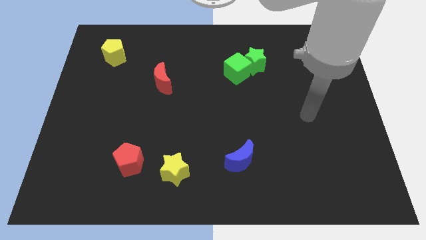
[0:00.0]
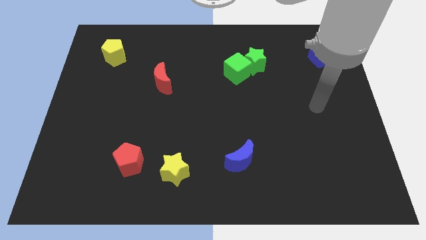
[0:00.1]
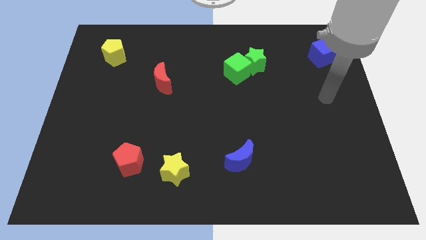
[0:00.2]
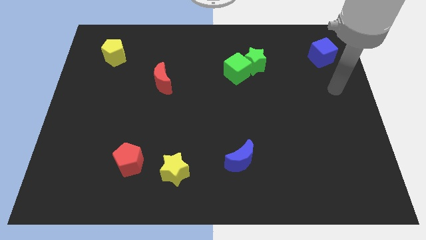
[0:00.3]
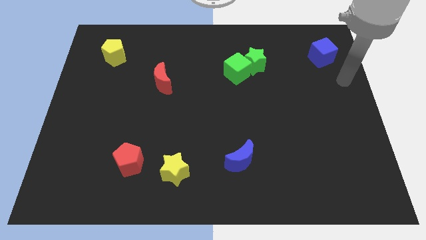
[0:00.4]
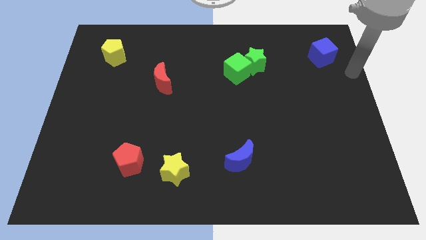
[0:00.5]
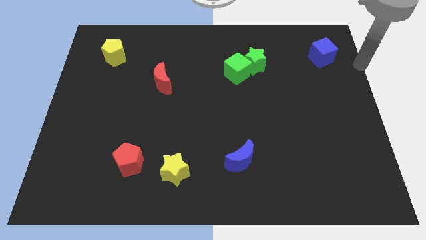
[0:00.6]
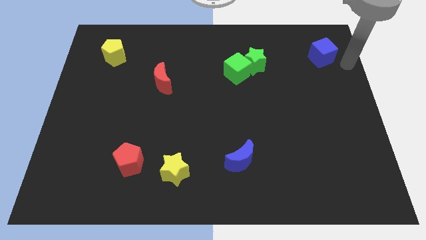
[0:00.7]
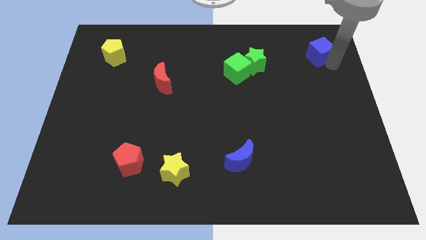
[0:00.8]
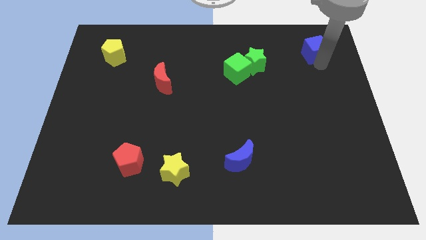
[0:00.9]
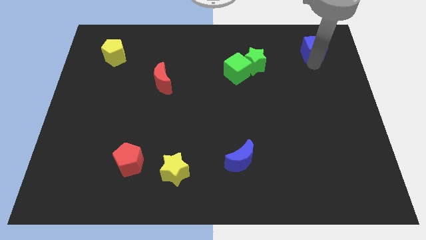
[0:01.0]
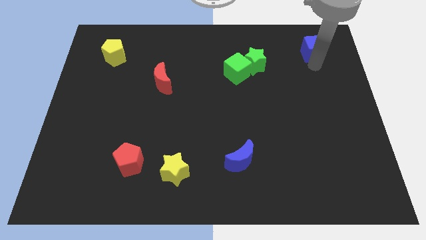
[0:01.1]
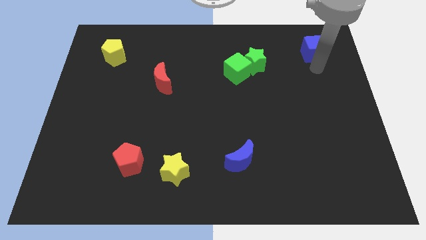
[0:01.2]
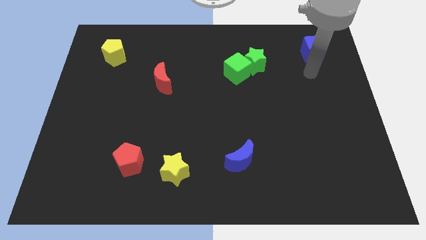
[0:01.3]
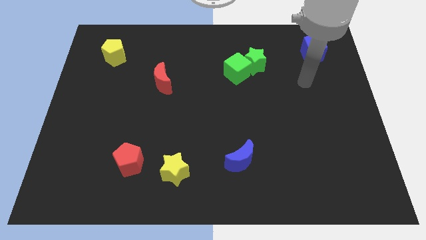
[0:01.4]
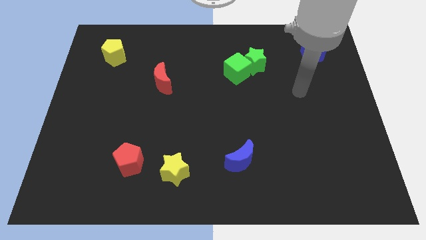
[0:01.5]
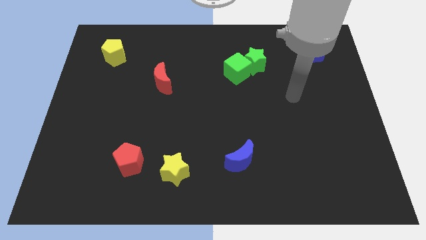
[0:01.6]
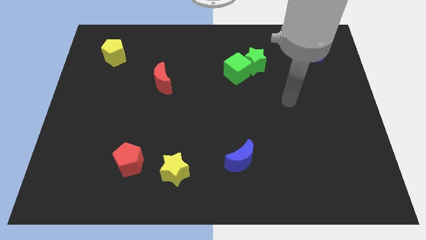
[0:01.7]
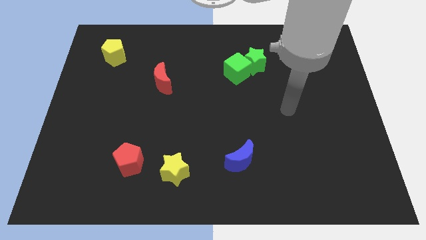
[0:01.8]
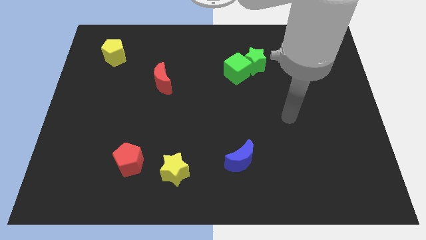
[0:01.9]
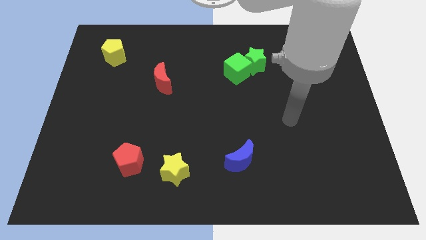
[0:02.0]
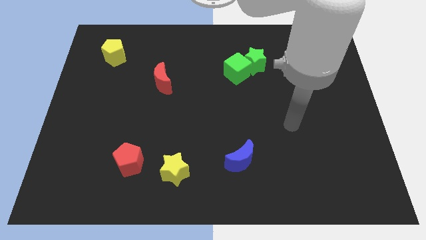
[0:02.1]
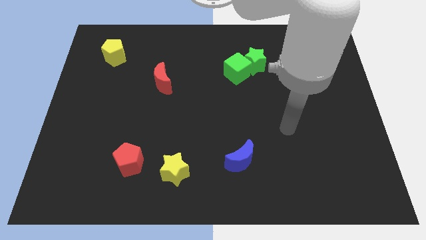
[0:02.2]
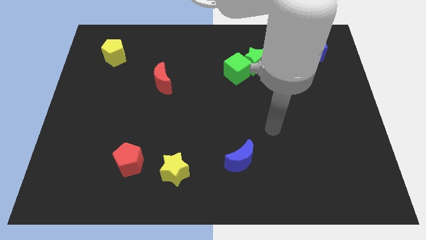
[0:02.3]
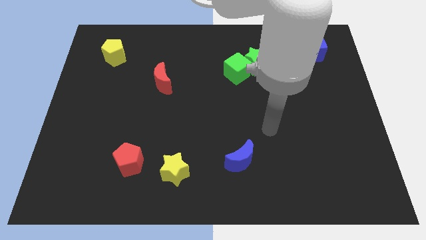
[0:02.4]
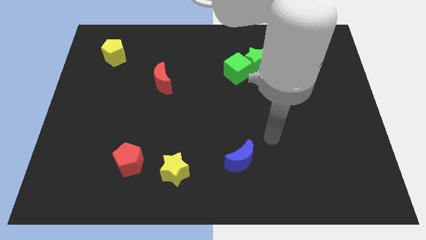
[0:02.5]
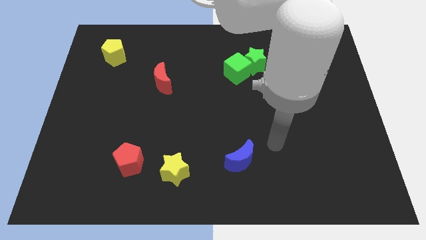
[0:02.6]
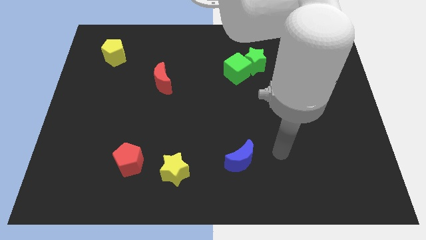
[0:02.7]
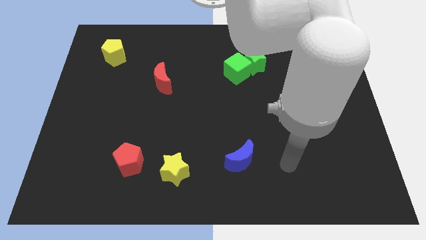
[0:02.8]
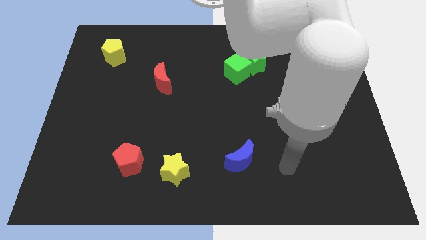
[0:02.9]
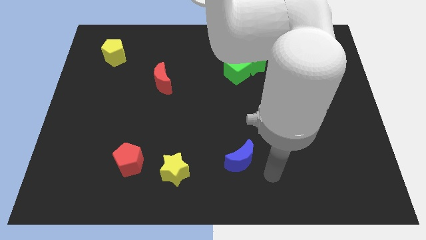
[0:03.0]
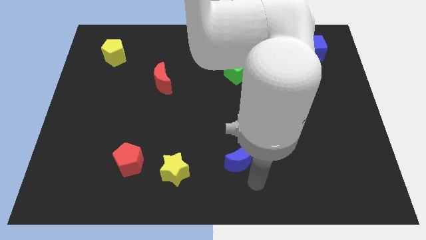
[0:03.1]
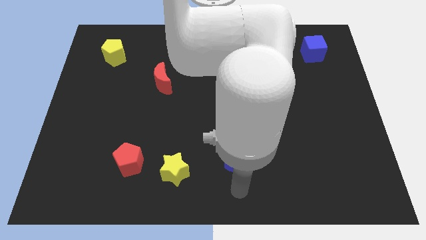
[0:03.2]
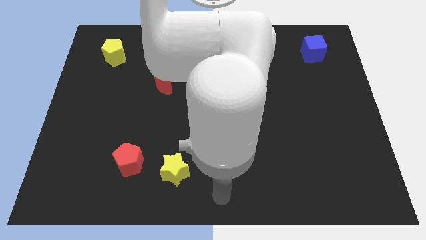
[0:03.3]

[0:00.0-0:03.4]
point your arm at the bottom center of the board

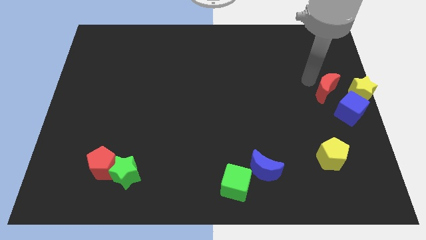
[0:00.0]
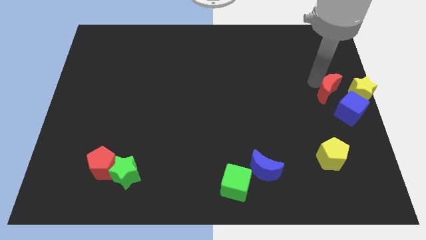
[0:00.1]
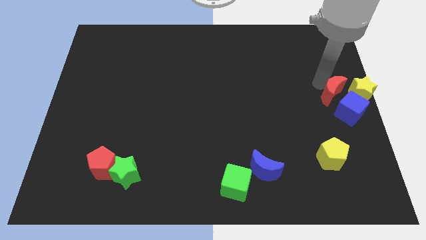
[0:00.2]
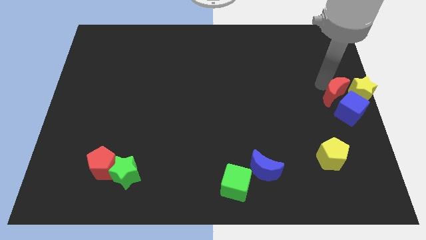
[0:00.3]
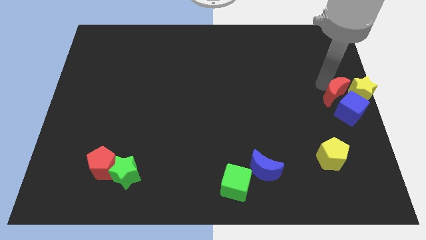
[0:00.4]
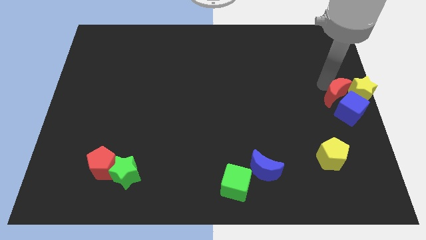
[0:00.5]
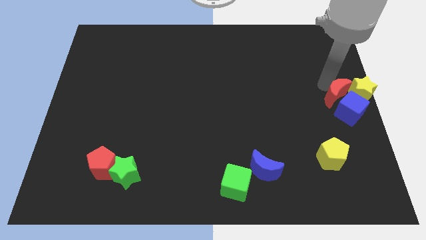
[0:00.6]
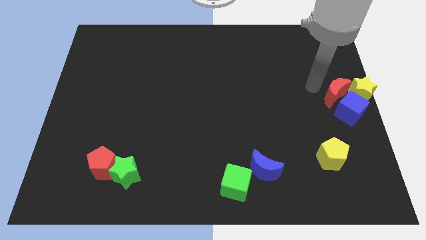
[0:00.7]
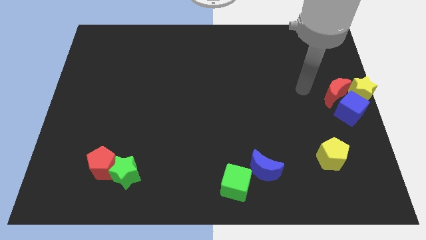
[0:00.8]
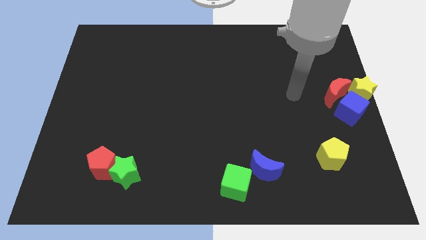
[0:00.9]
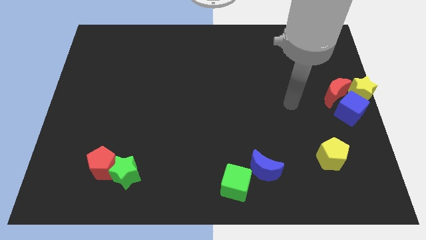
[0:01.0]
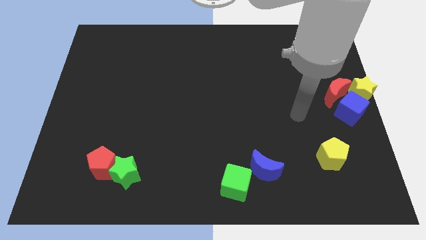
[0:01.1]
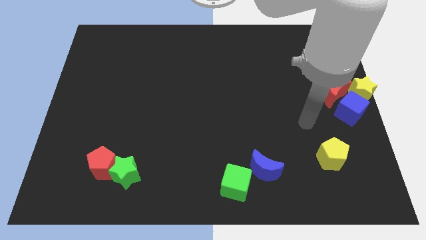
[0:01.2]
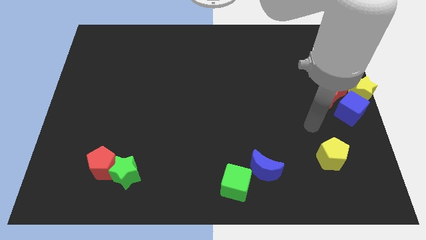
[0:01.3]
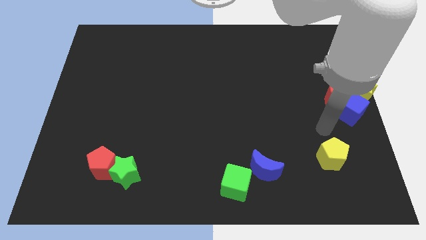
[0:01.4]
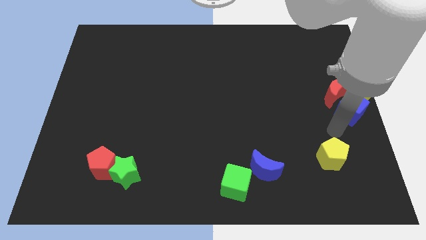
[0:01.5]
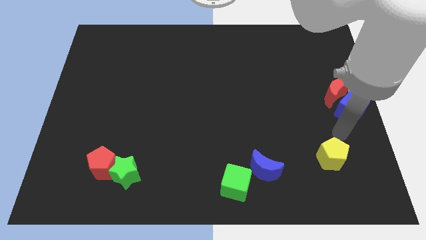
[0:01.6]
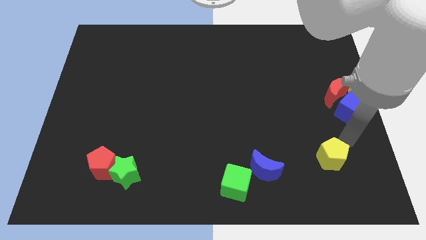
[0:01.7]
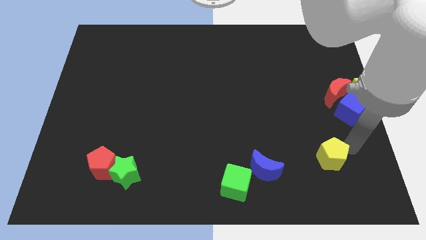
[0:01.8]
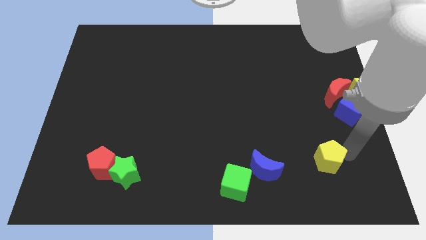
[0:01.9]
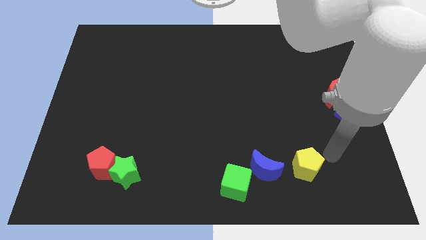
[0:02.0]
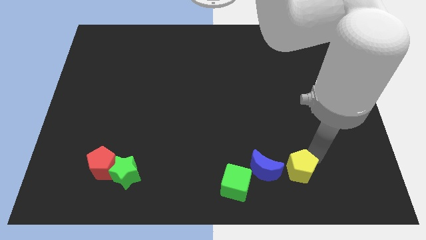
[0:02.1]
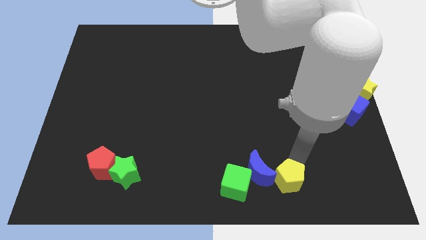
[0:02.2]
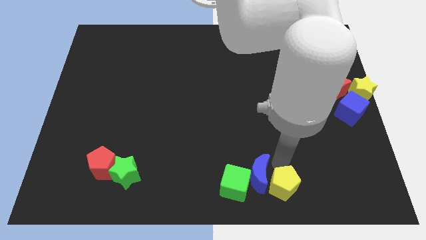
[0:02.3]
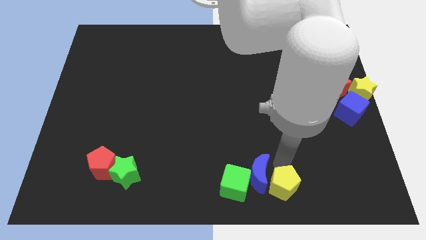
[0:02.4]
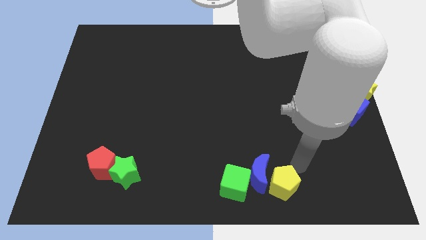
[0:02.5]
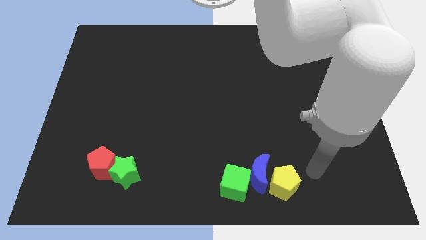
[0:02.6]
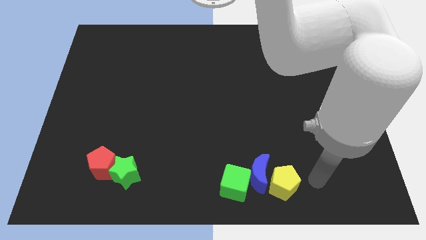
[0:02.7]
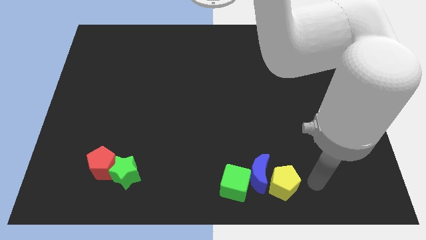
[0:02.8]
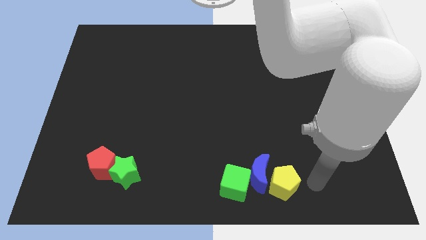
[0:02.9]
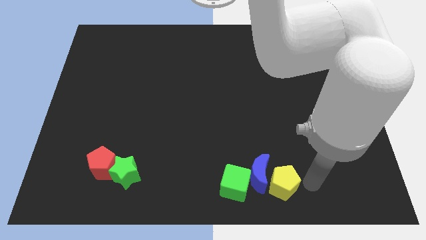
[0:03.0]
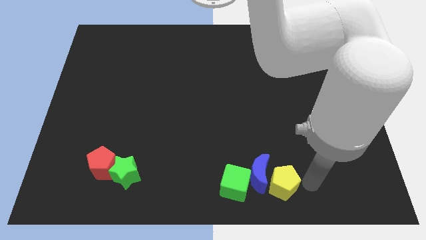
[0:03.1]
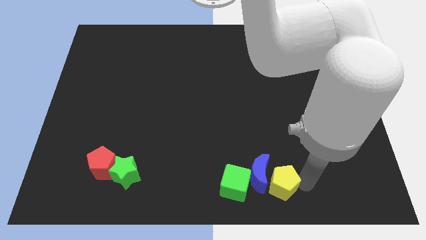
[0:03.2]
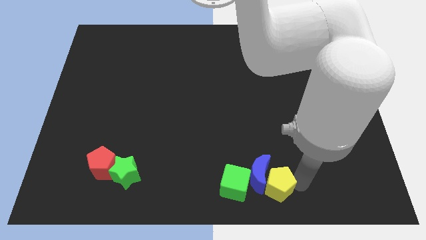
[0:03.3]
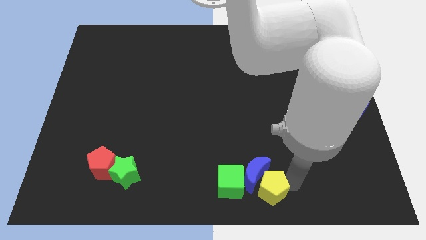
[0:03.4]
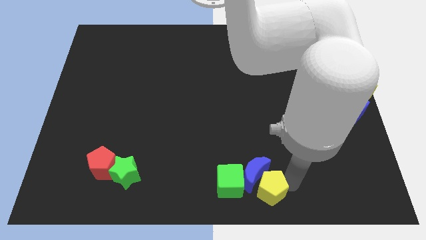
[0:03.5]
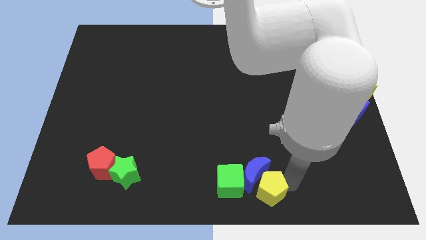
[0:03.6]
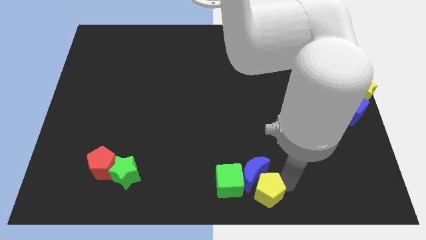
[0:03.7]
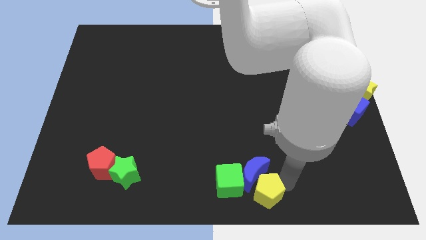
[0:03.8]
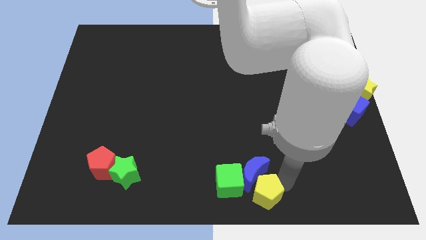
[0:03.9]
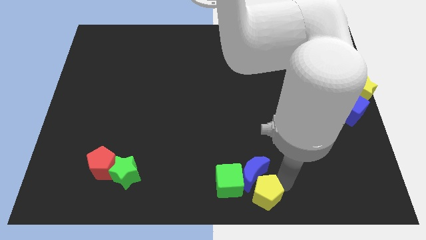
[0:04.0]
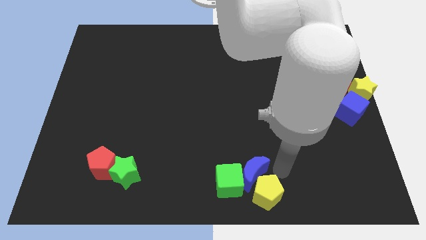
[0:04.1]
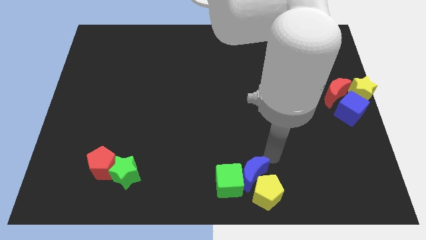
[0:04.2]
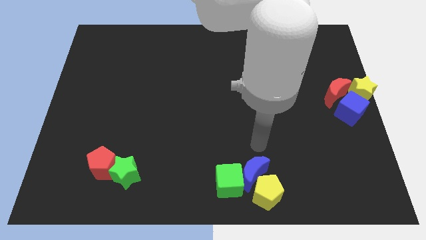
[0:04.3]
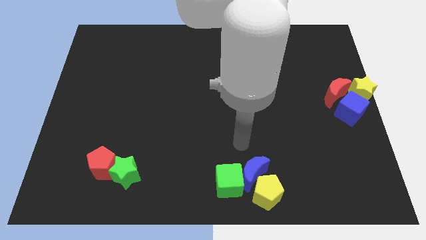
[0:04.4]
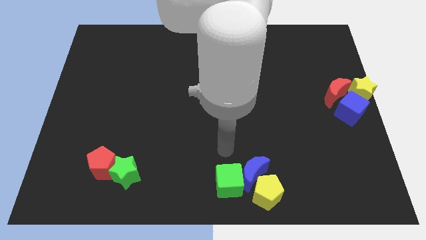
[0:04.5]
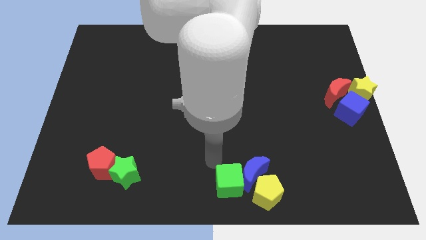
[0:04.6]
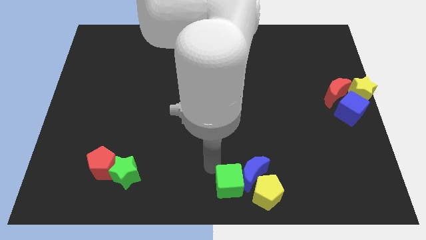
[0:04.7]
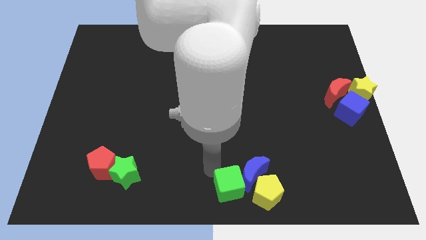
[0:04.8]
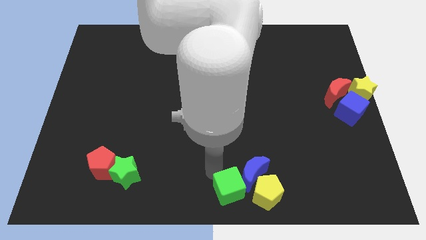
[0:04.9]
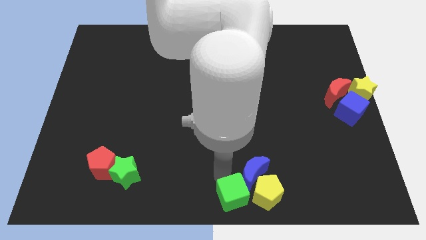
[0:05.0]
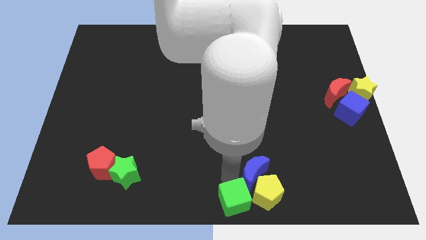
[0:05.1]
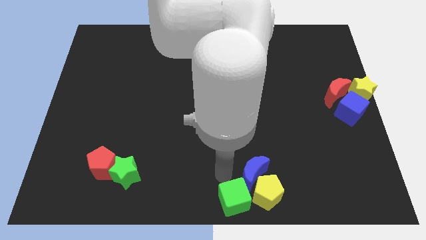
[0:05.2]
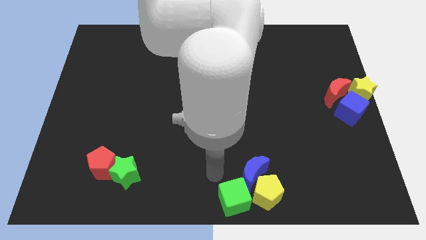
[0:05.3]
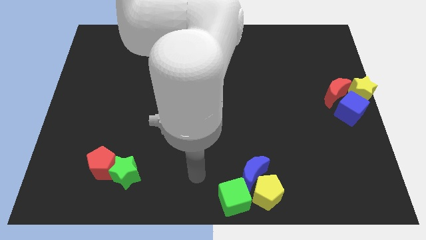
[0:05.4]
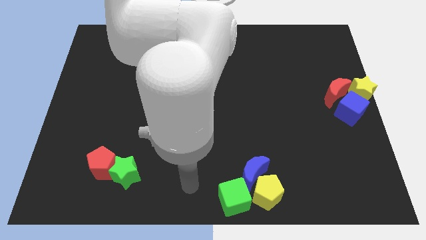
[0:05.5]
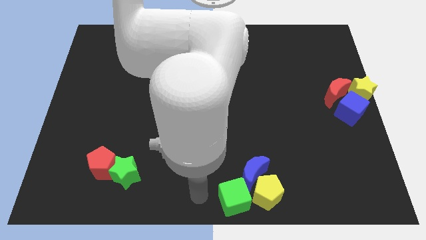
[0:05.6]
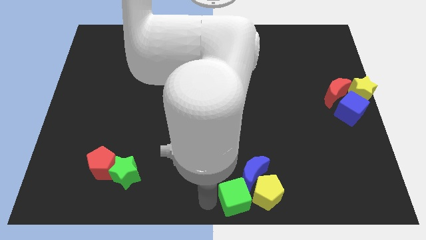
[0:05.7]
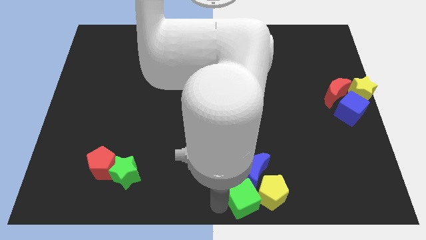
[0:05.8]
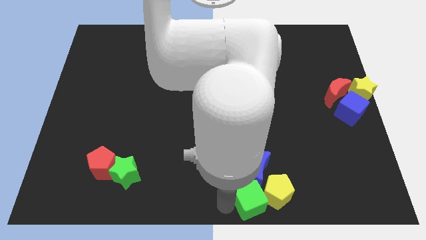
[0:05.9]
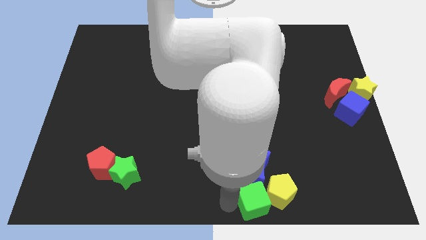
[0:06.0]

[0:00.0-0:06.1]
move the green cube into the yellow pentagon
